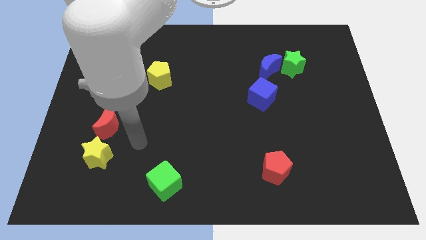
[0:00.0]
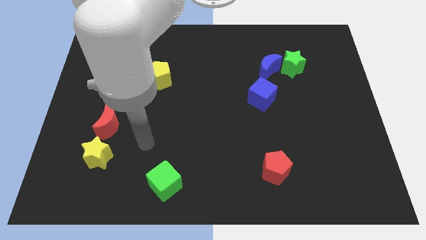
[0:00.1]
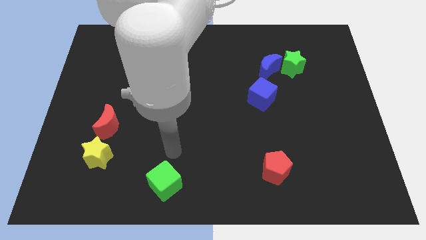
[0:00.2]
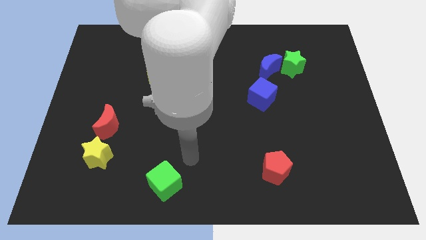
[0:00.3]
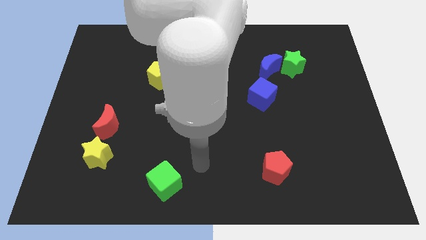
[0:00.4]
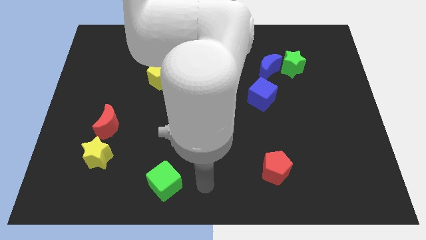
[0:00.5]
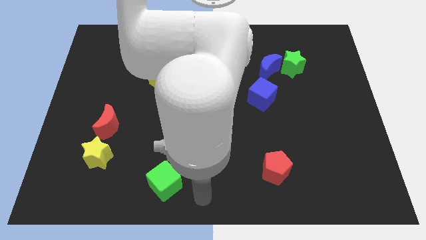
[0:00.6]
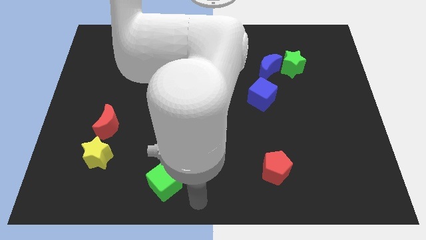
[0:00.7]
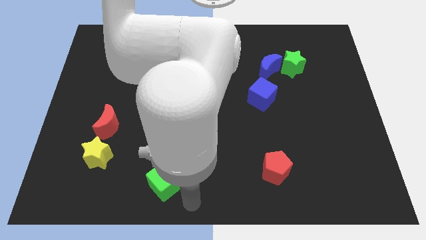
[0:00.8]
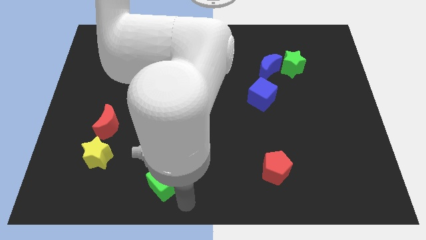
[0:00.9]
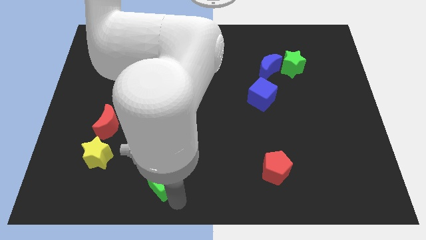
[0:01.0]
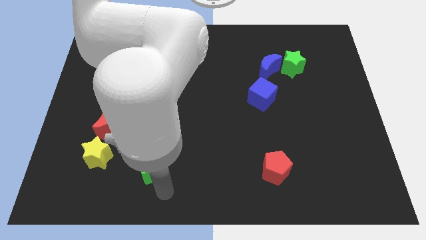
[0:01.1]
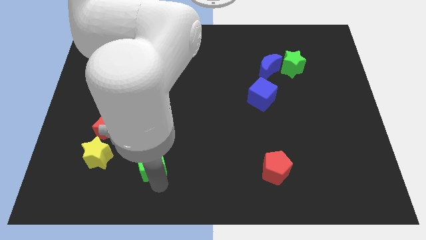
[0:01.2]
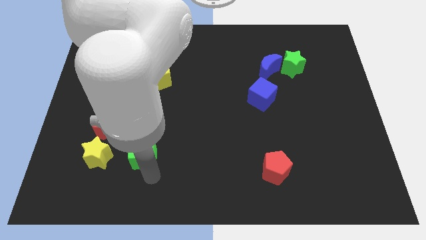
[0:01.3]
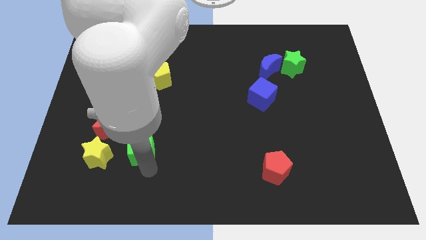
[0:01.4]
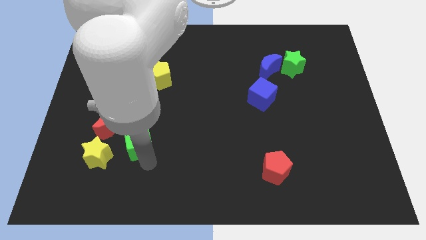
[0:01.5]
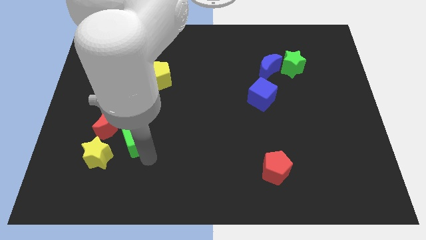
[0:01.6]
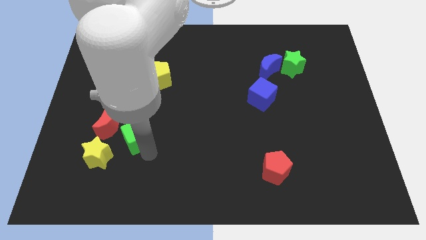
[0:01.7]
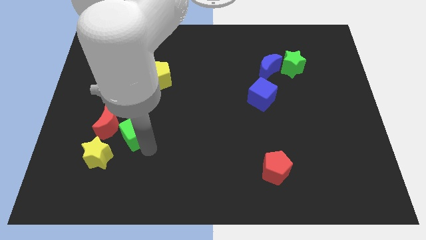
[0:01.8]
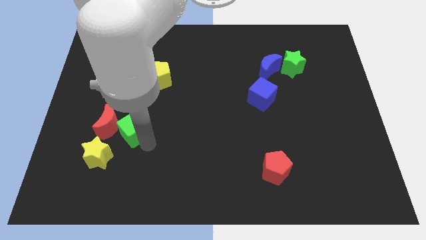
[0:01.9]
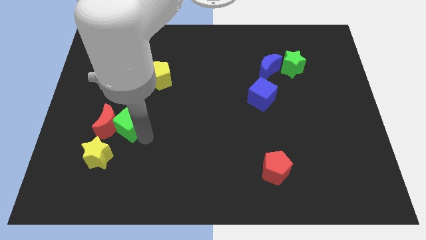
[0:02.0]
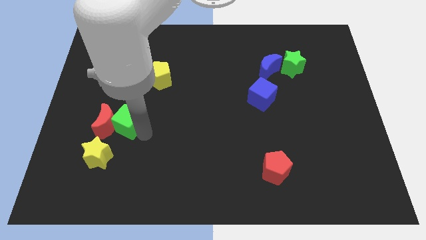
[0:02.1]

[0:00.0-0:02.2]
push the green cube next to the red moon

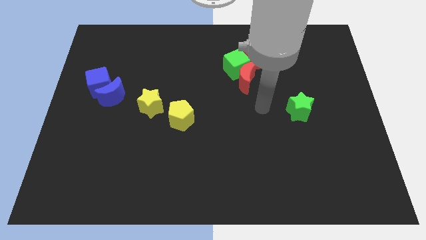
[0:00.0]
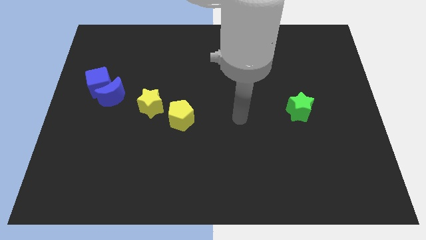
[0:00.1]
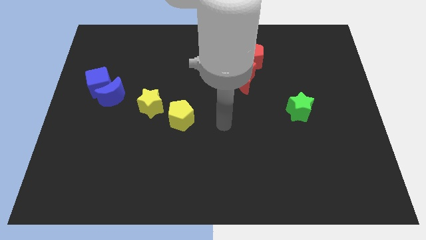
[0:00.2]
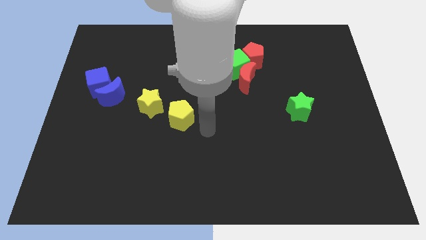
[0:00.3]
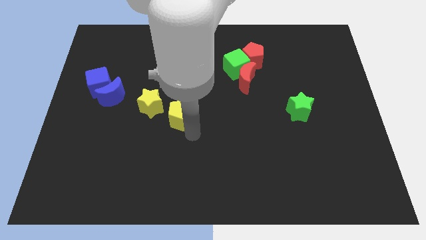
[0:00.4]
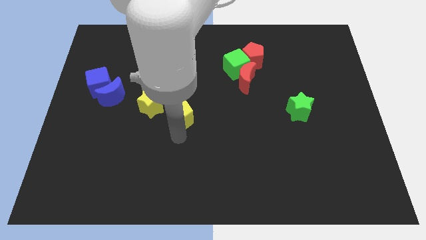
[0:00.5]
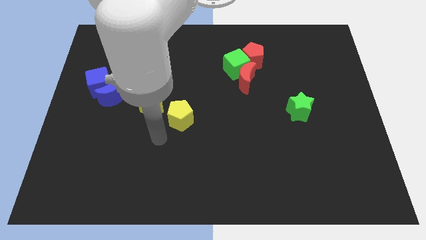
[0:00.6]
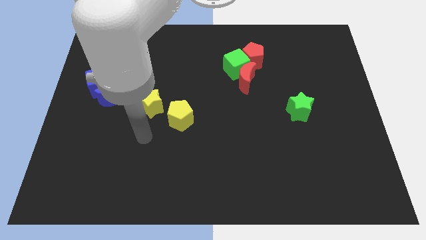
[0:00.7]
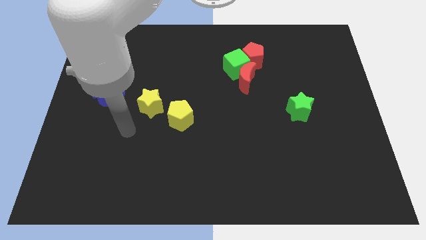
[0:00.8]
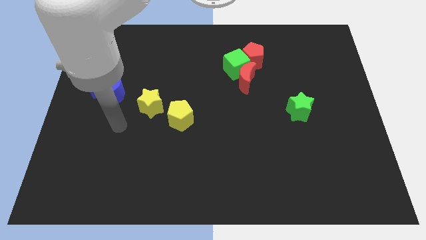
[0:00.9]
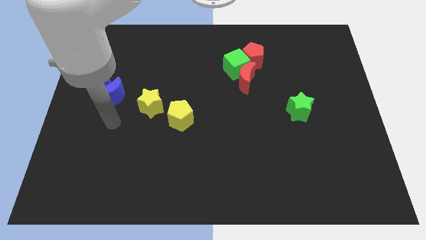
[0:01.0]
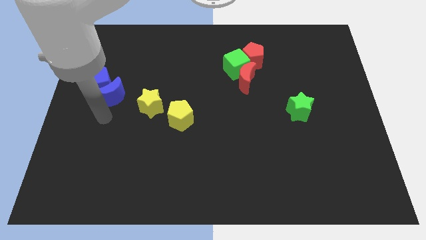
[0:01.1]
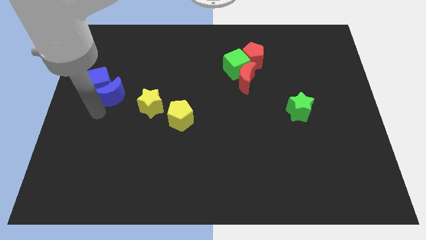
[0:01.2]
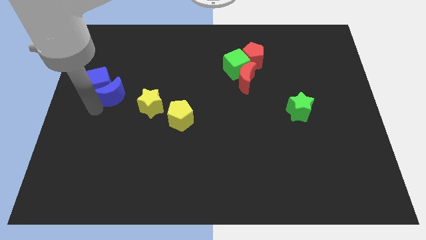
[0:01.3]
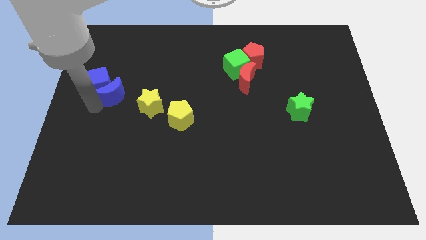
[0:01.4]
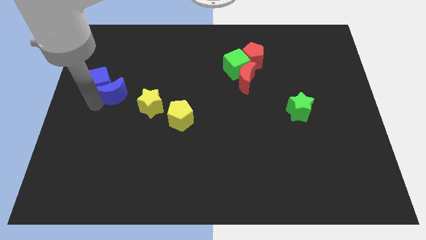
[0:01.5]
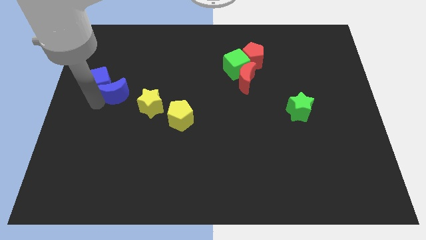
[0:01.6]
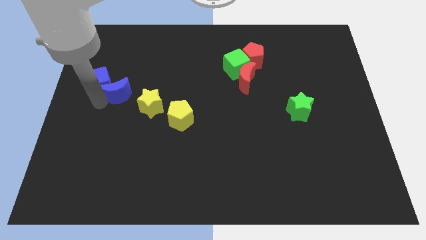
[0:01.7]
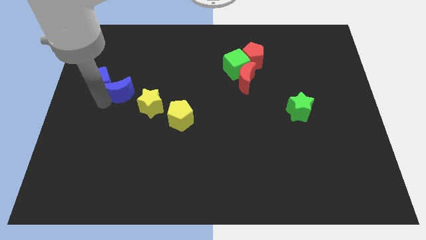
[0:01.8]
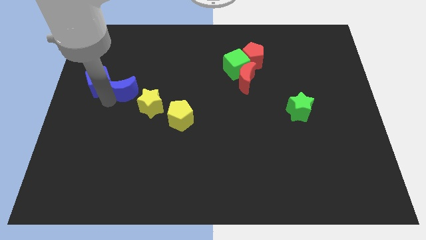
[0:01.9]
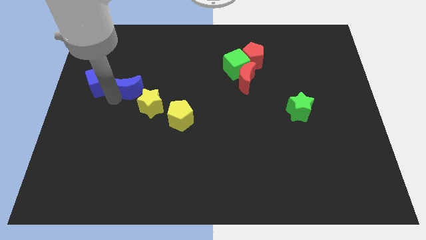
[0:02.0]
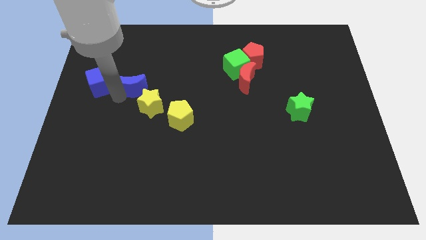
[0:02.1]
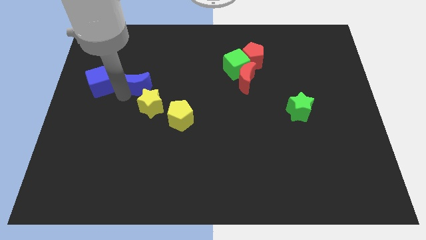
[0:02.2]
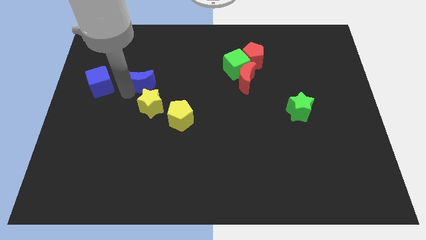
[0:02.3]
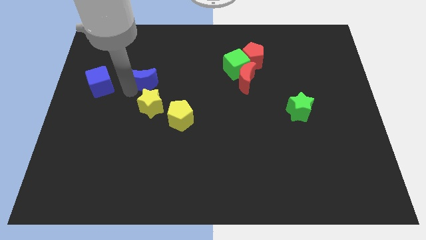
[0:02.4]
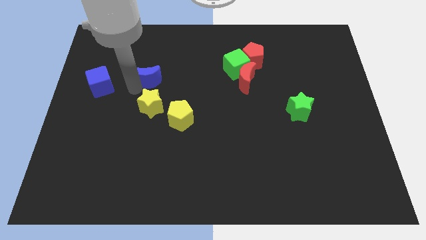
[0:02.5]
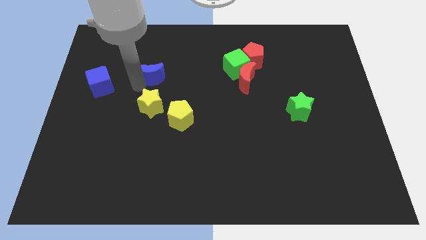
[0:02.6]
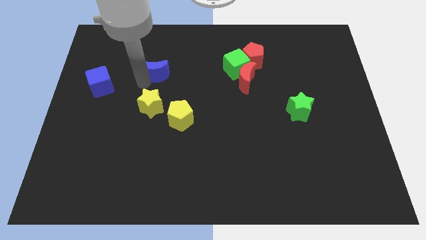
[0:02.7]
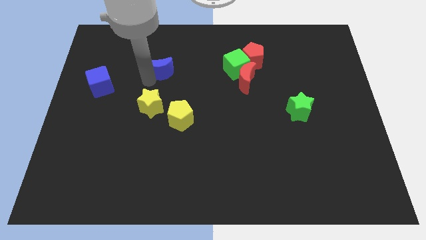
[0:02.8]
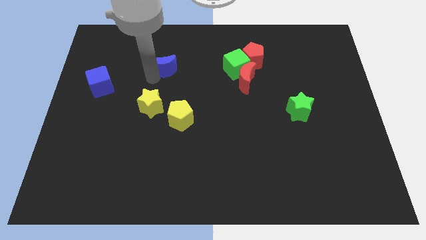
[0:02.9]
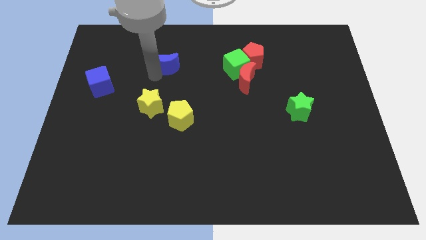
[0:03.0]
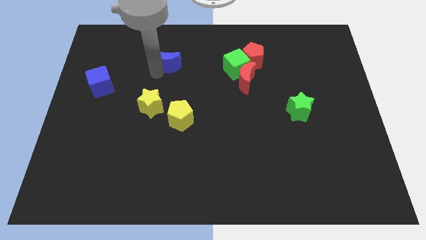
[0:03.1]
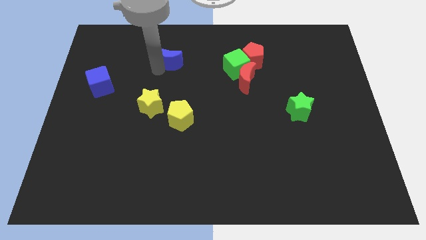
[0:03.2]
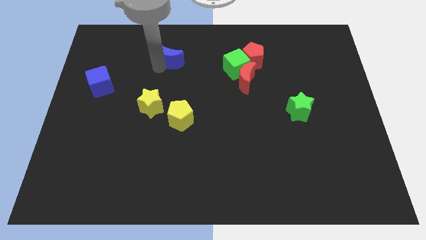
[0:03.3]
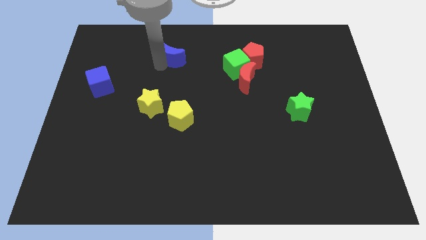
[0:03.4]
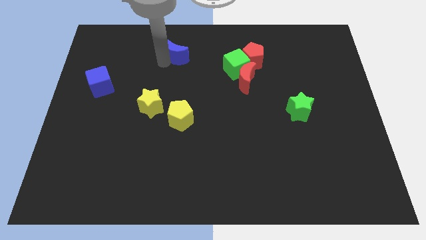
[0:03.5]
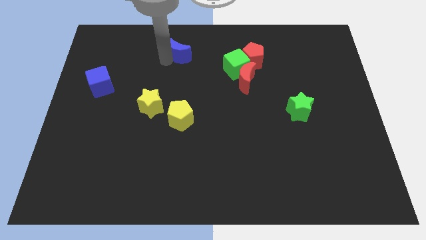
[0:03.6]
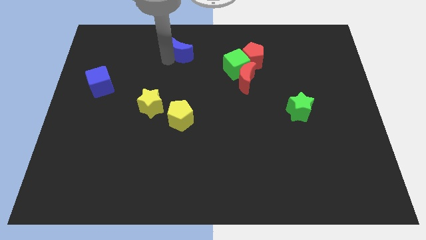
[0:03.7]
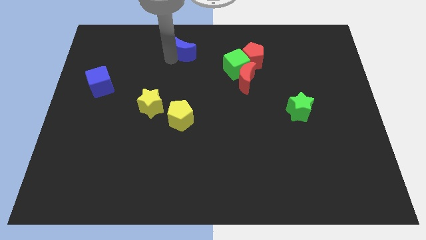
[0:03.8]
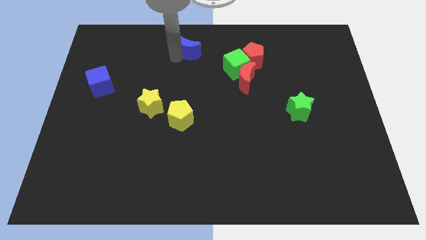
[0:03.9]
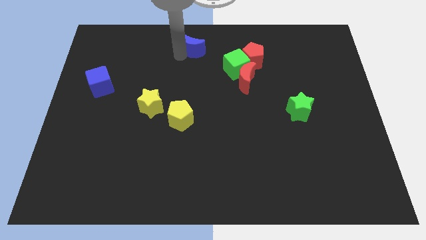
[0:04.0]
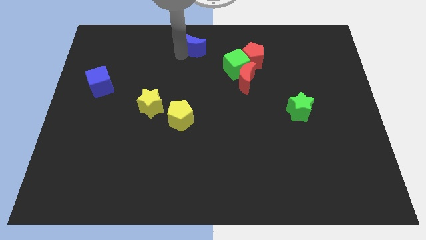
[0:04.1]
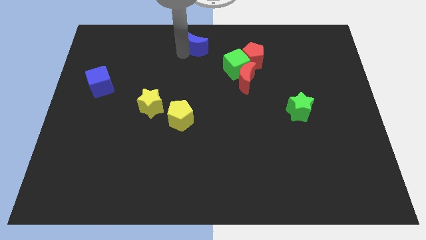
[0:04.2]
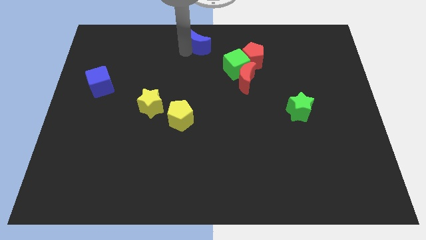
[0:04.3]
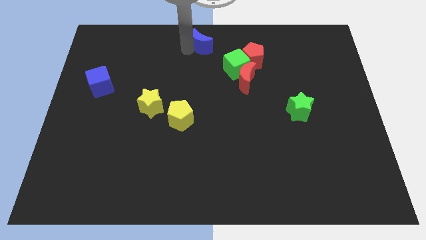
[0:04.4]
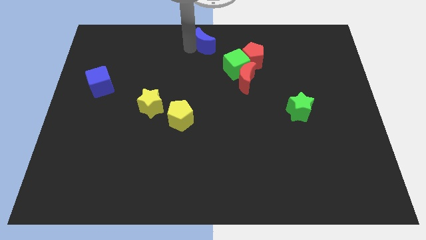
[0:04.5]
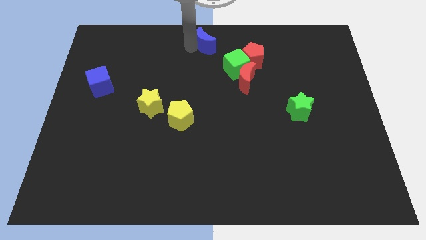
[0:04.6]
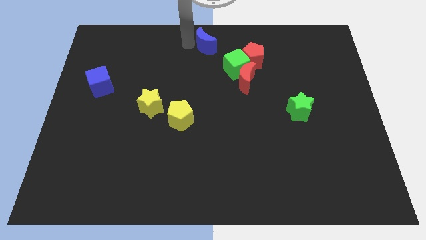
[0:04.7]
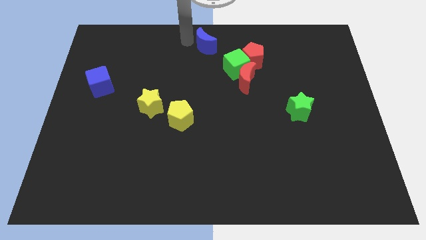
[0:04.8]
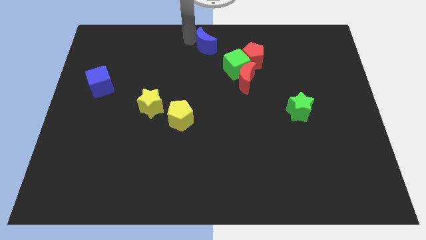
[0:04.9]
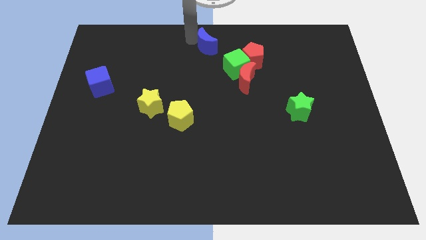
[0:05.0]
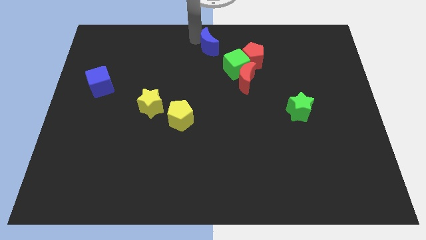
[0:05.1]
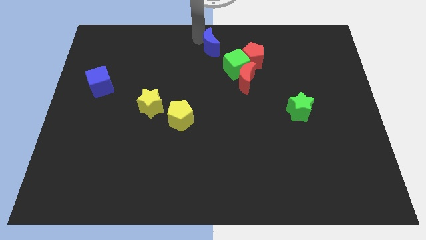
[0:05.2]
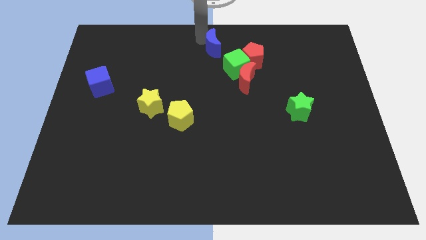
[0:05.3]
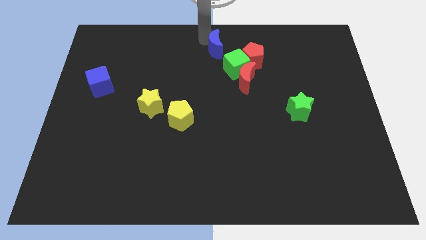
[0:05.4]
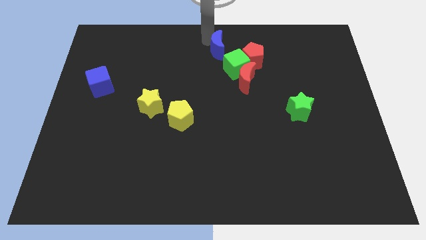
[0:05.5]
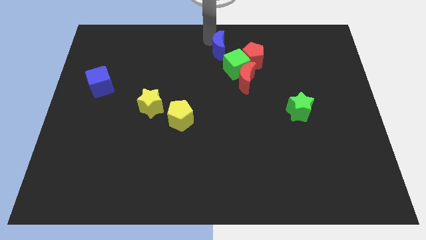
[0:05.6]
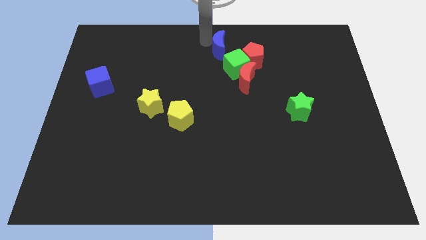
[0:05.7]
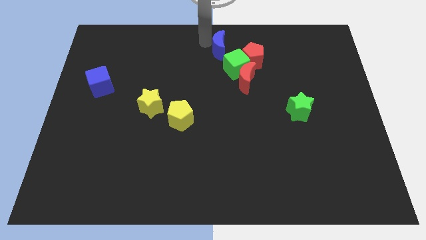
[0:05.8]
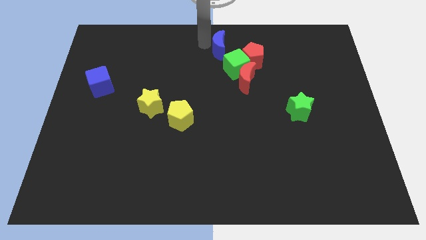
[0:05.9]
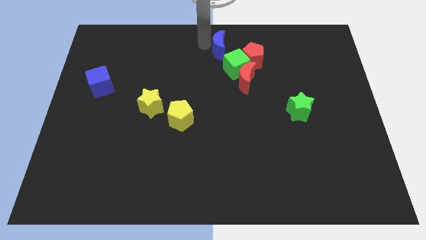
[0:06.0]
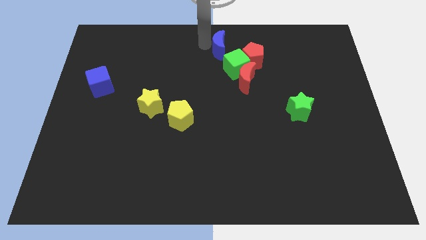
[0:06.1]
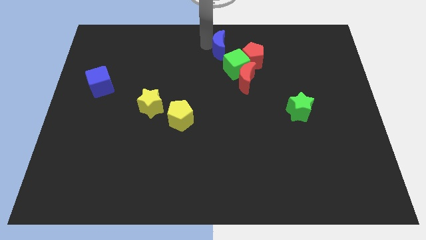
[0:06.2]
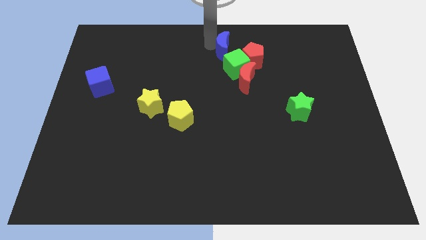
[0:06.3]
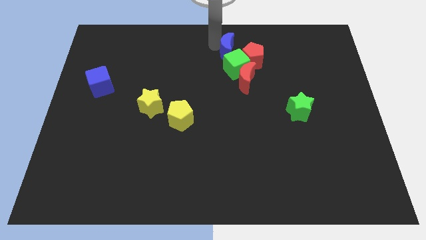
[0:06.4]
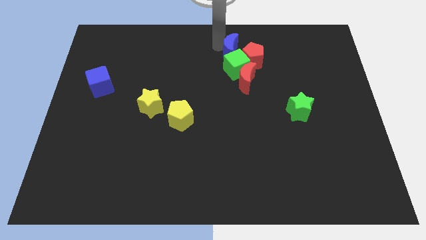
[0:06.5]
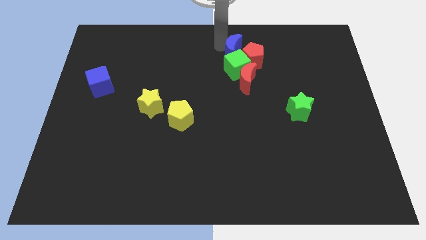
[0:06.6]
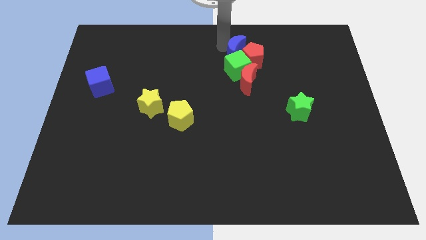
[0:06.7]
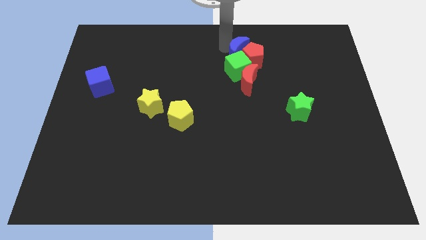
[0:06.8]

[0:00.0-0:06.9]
move the blue moon next to the red pentagon
